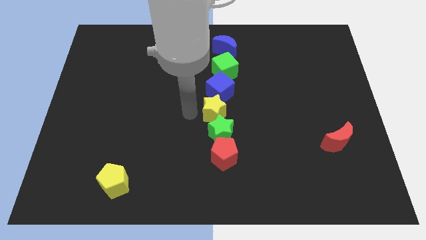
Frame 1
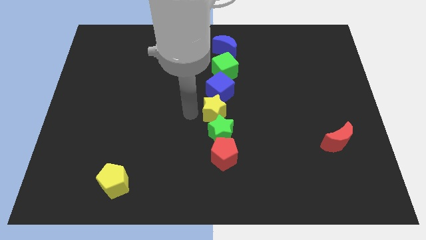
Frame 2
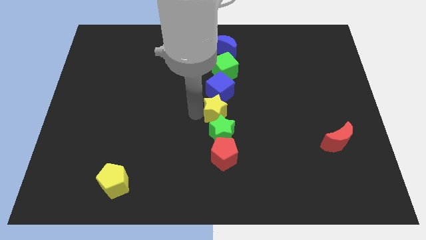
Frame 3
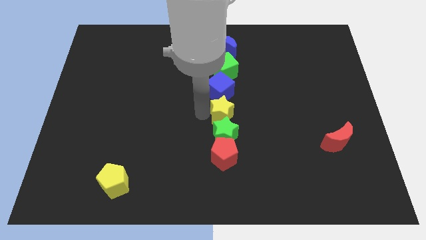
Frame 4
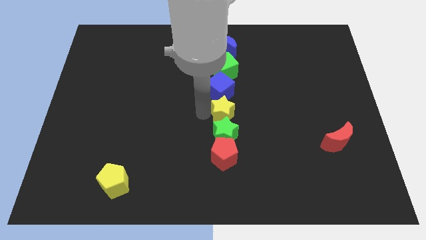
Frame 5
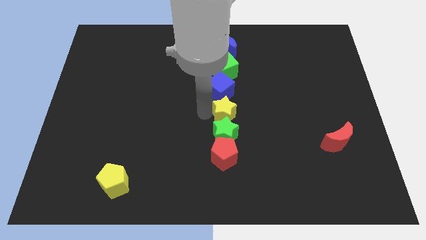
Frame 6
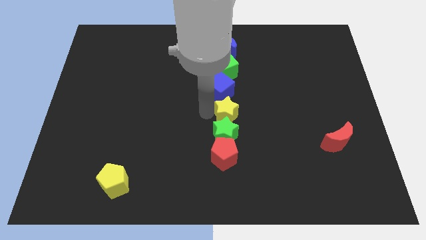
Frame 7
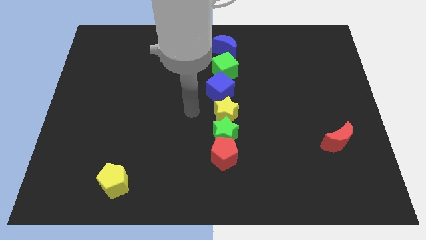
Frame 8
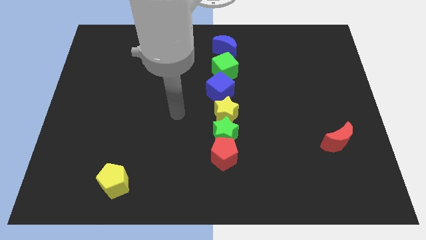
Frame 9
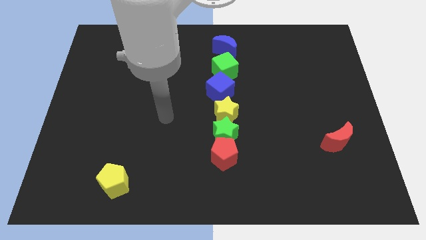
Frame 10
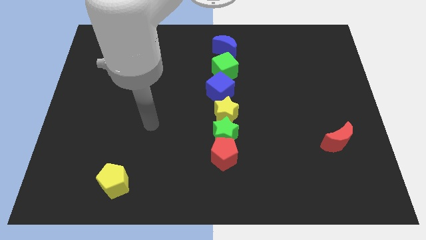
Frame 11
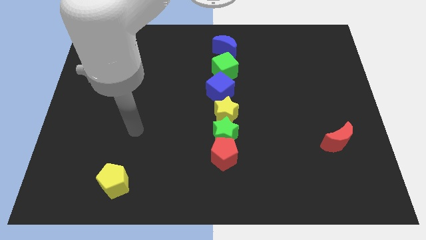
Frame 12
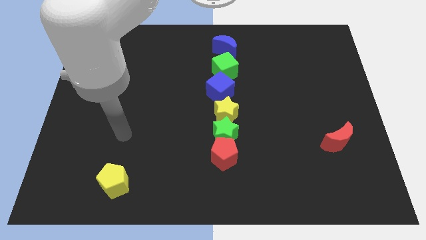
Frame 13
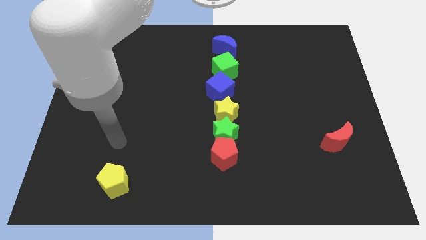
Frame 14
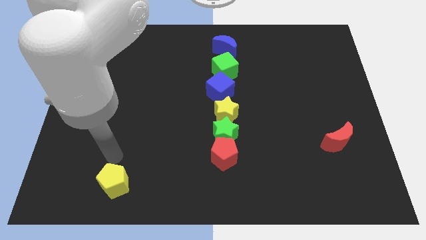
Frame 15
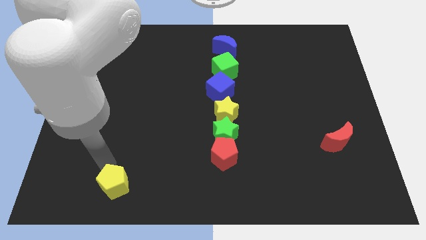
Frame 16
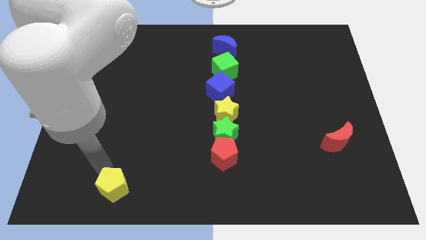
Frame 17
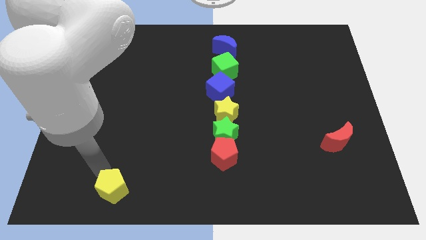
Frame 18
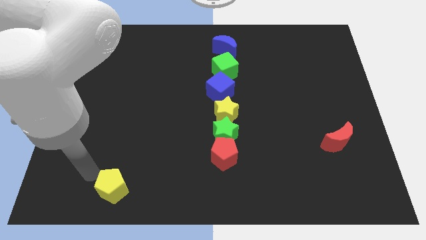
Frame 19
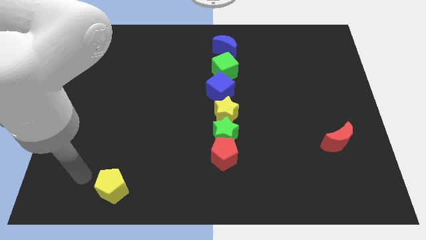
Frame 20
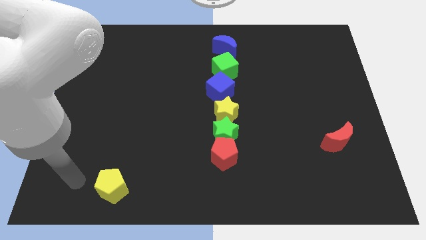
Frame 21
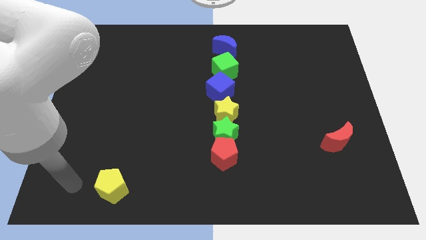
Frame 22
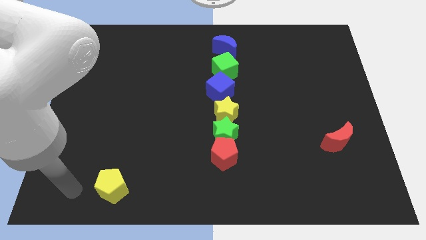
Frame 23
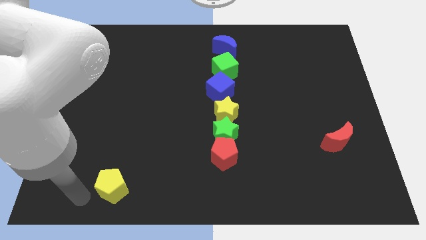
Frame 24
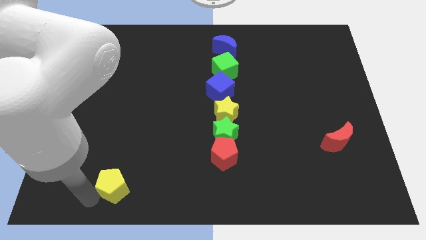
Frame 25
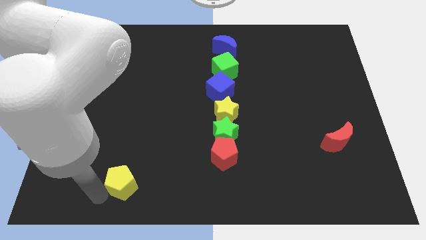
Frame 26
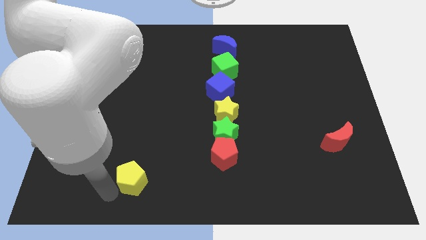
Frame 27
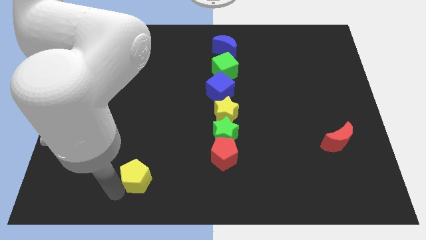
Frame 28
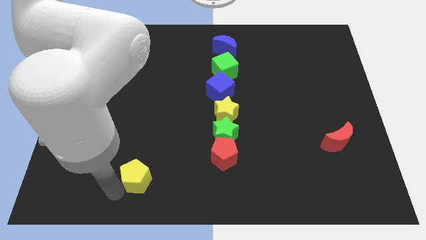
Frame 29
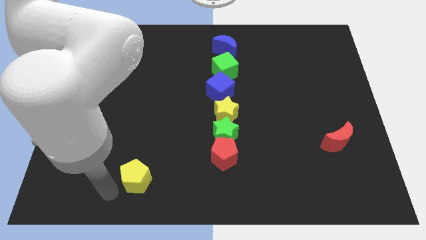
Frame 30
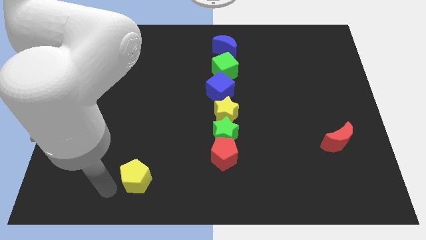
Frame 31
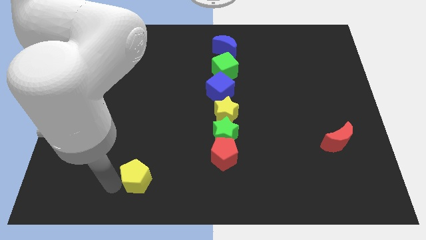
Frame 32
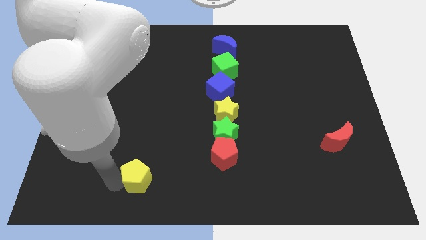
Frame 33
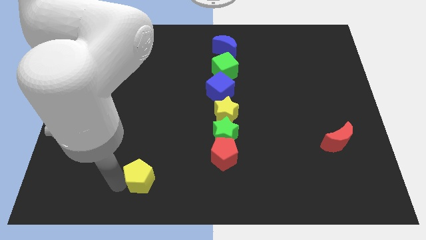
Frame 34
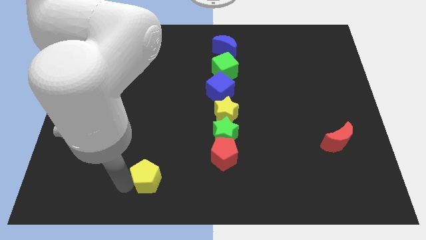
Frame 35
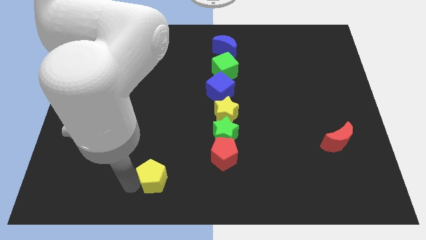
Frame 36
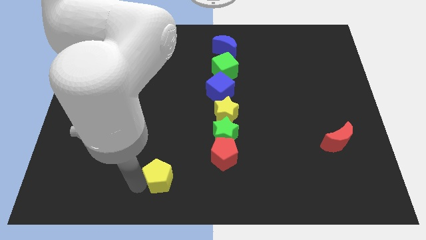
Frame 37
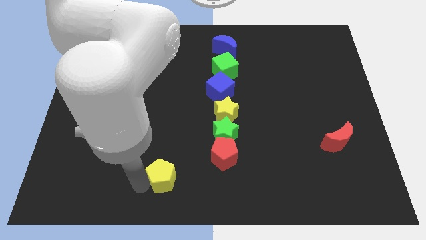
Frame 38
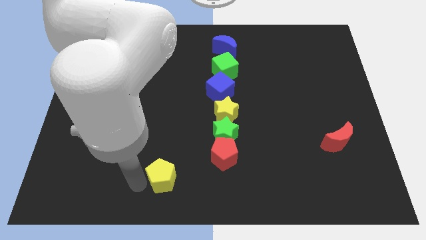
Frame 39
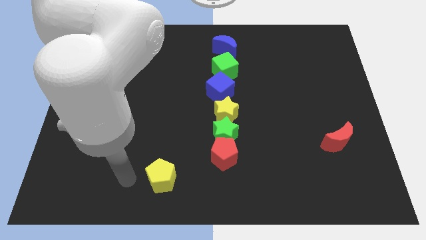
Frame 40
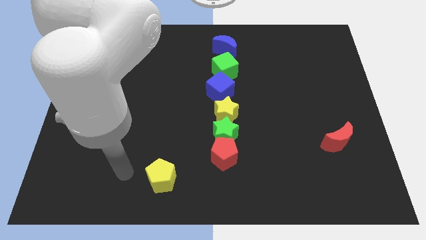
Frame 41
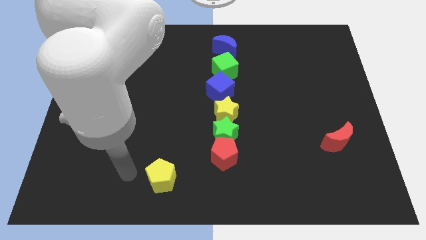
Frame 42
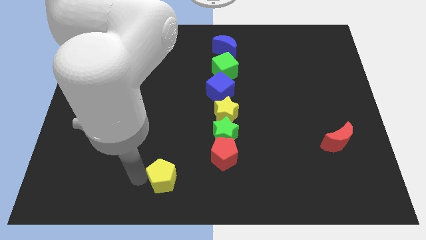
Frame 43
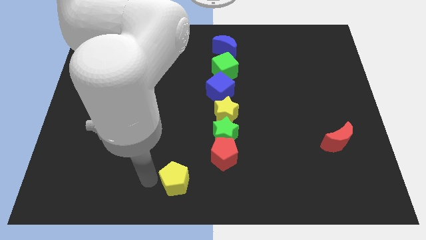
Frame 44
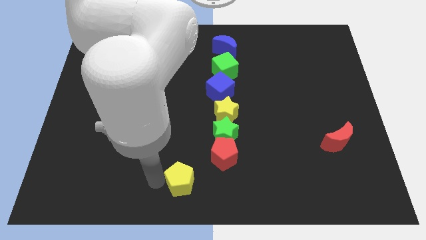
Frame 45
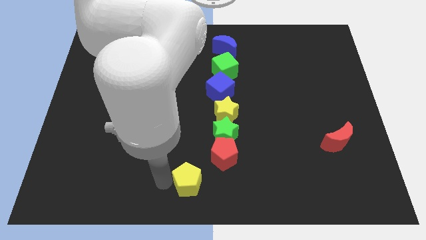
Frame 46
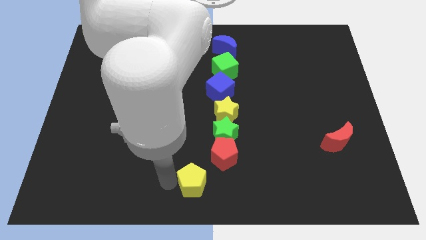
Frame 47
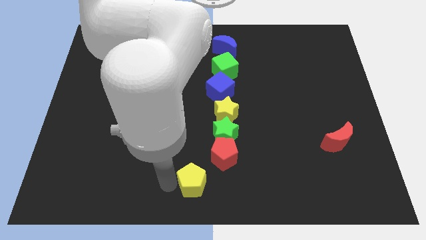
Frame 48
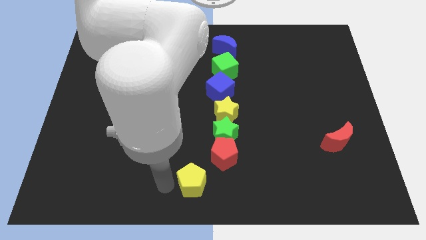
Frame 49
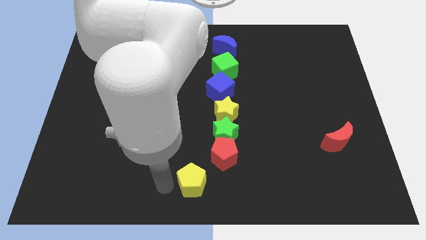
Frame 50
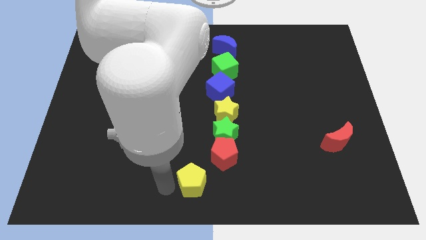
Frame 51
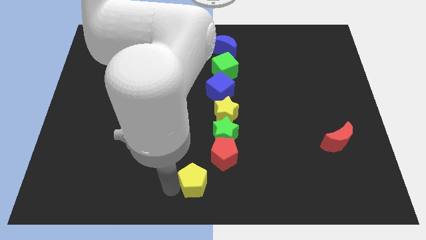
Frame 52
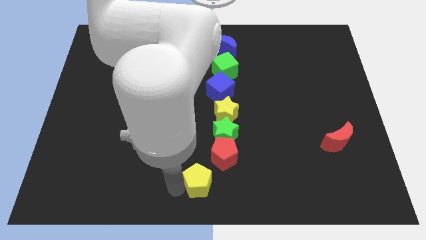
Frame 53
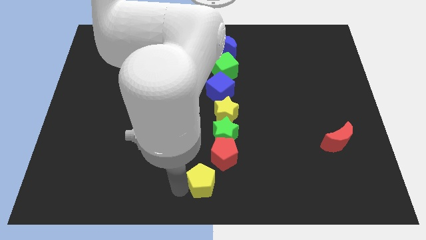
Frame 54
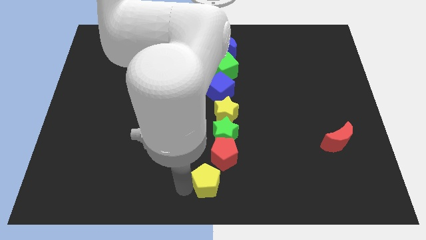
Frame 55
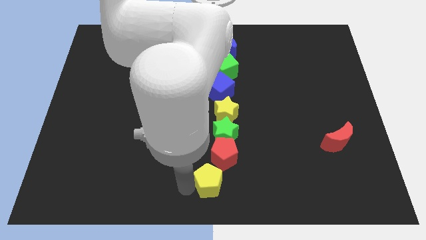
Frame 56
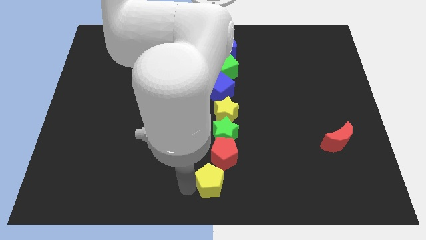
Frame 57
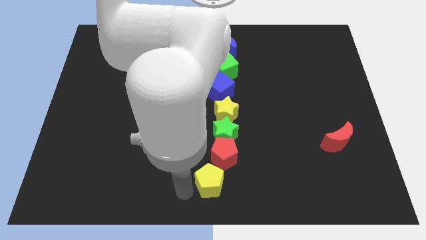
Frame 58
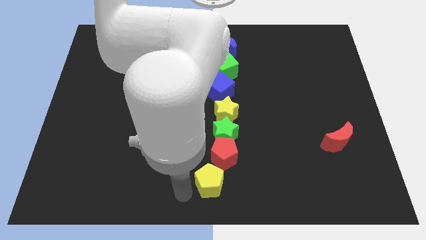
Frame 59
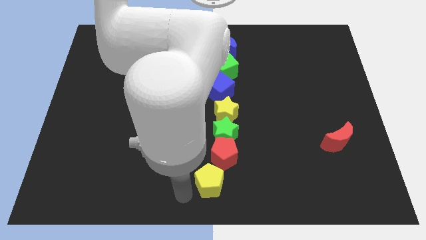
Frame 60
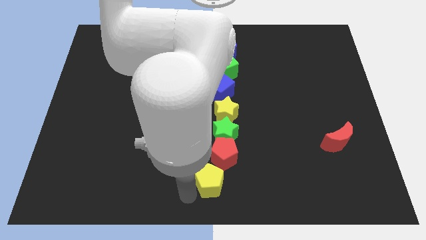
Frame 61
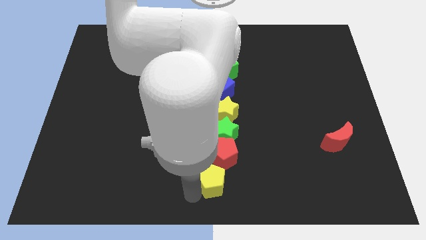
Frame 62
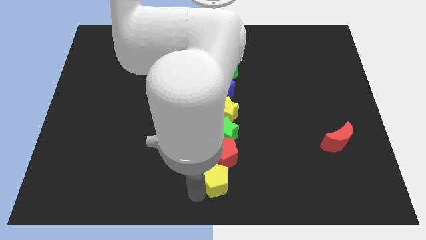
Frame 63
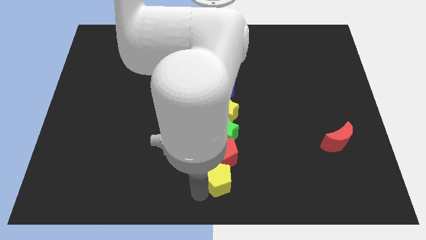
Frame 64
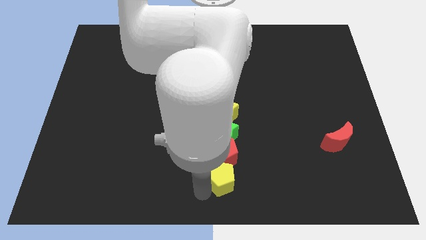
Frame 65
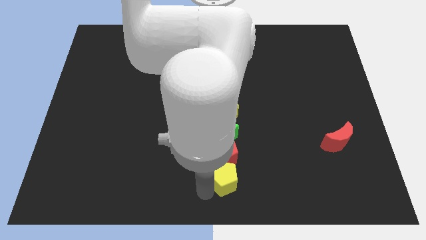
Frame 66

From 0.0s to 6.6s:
place yellow pentagon below red pentagon

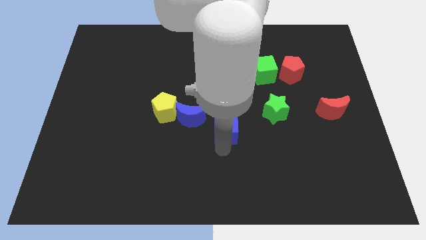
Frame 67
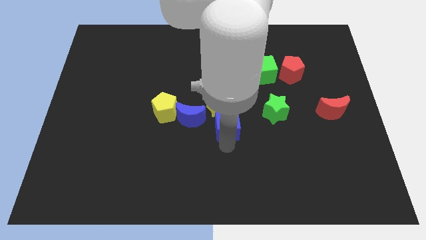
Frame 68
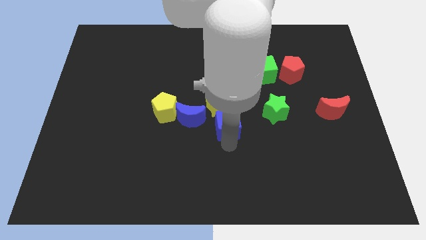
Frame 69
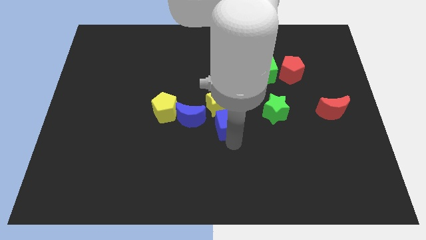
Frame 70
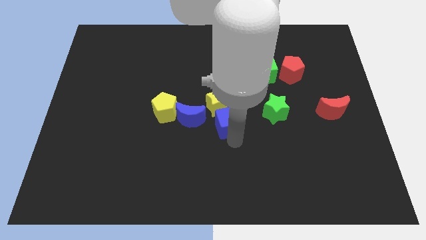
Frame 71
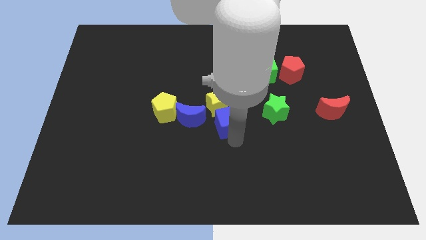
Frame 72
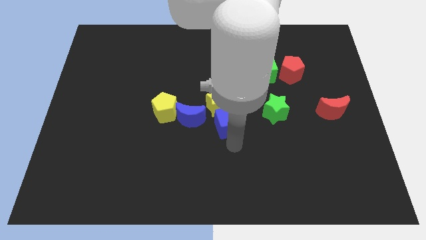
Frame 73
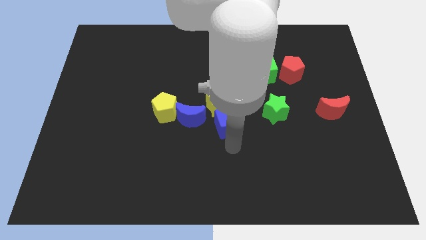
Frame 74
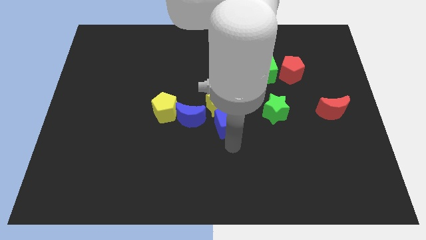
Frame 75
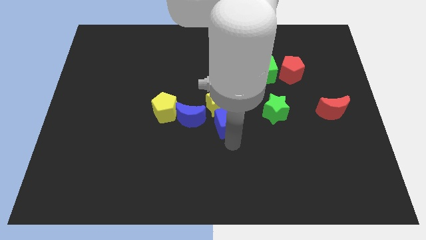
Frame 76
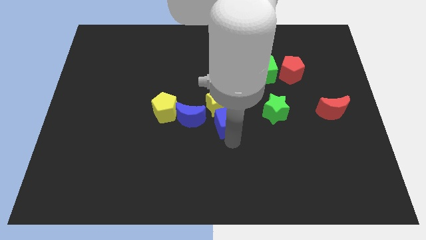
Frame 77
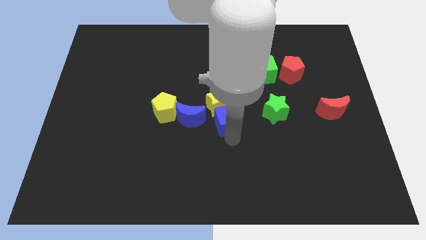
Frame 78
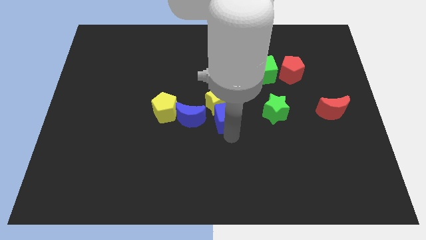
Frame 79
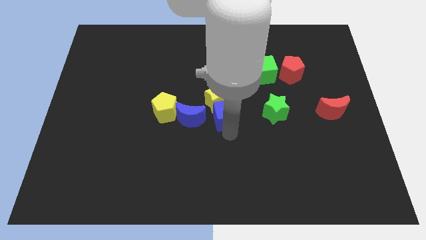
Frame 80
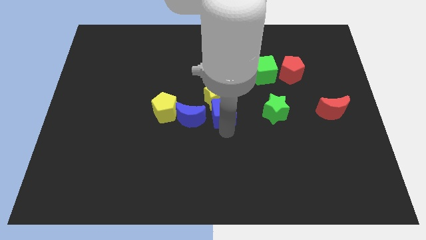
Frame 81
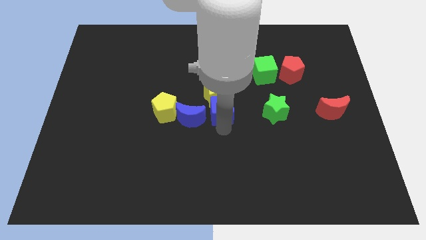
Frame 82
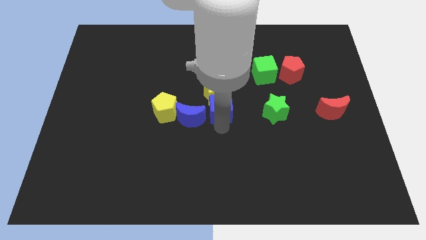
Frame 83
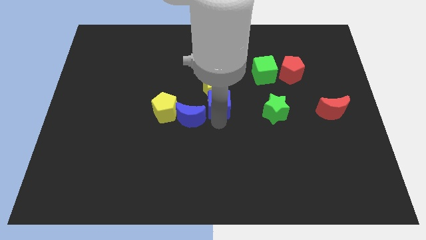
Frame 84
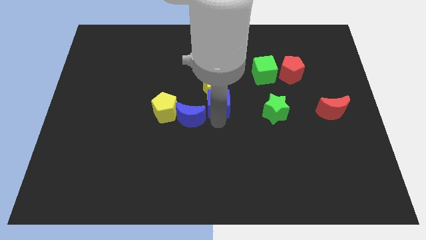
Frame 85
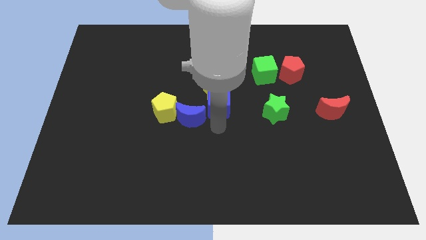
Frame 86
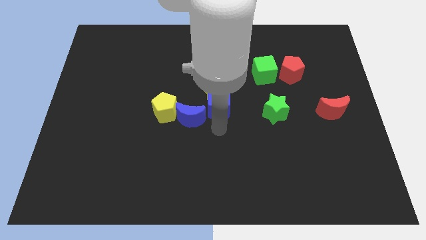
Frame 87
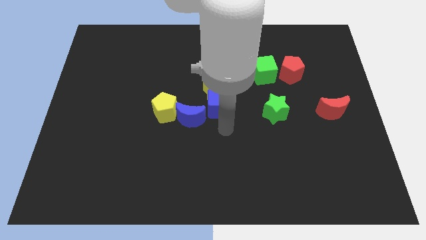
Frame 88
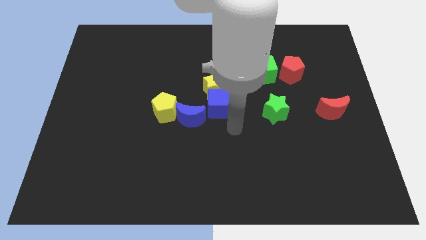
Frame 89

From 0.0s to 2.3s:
push the blue cube into the yellow star

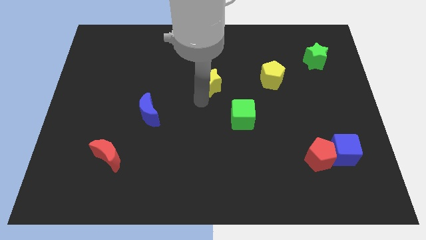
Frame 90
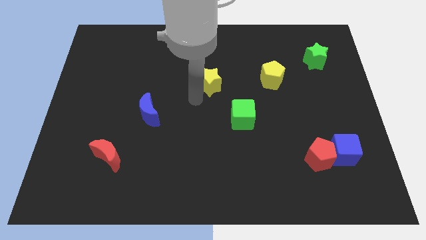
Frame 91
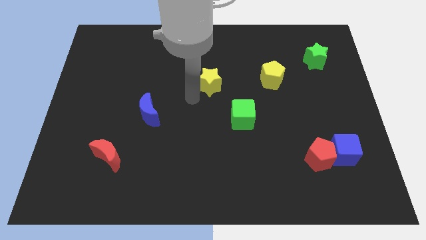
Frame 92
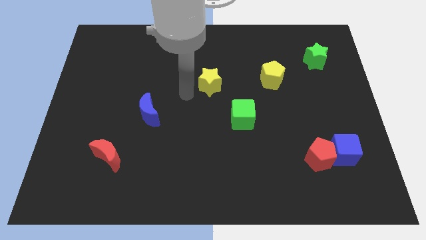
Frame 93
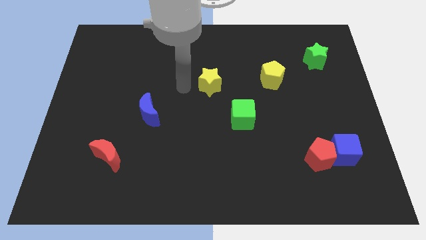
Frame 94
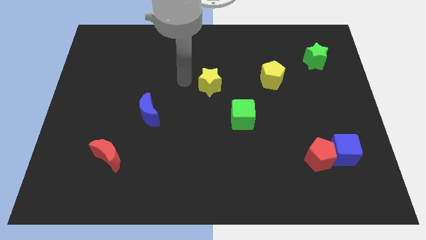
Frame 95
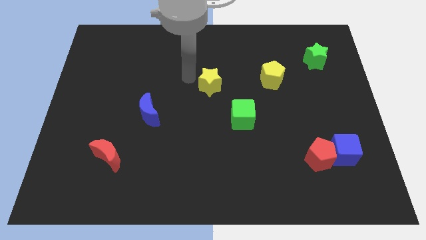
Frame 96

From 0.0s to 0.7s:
move your arm to the left of the yellow star
